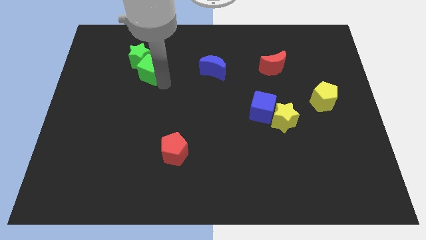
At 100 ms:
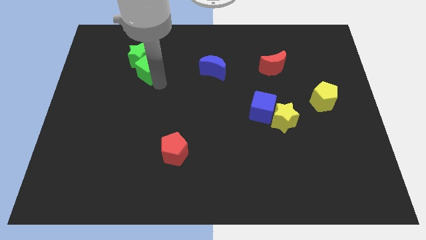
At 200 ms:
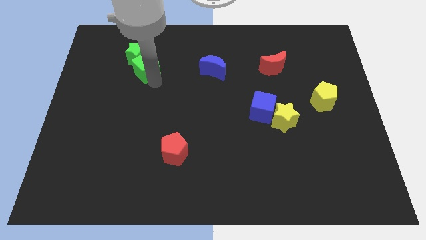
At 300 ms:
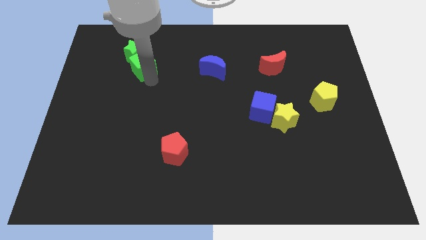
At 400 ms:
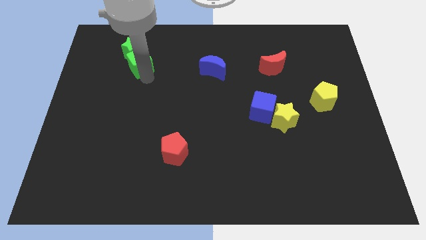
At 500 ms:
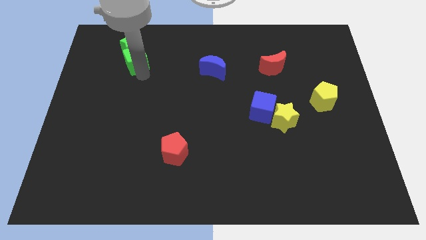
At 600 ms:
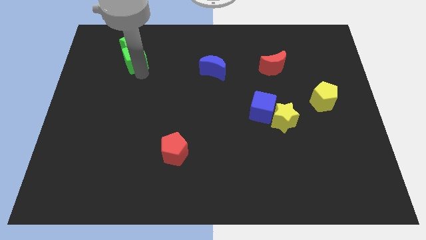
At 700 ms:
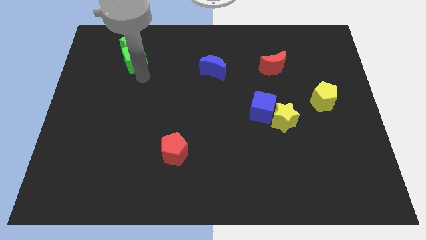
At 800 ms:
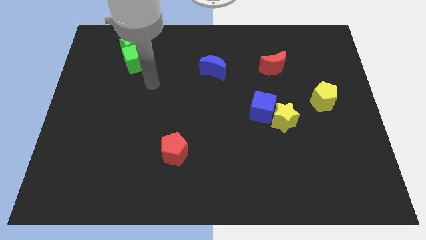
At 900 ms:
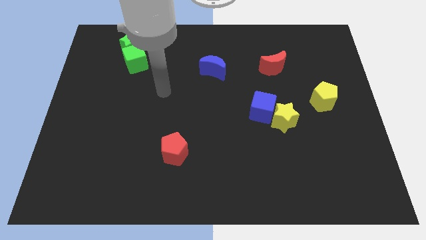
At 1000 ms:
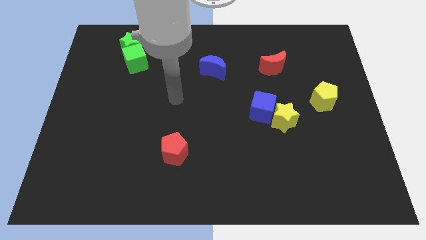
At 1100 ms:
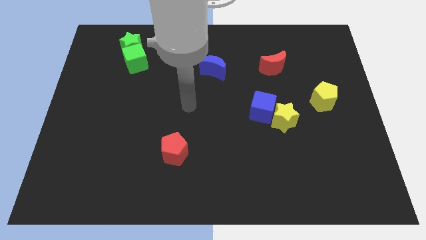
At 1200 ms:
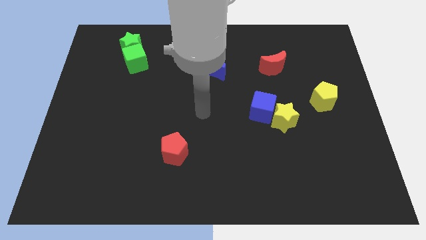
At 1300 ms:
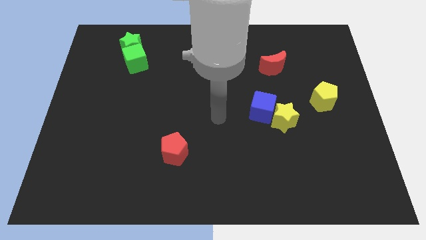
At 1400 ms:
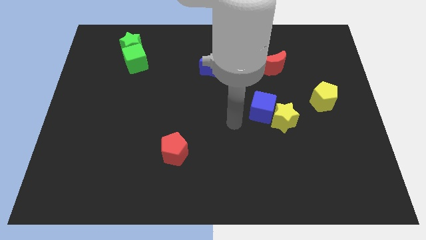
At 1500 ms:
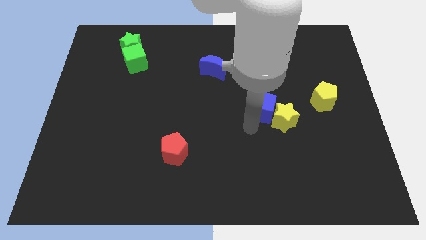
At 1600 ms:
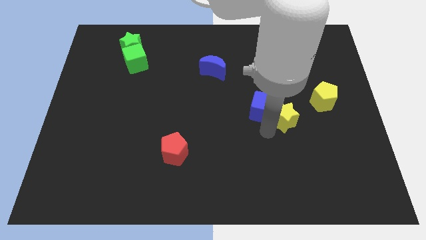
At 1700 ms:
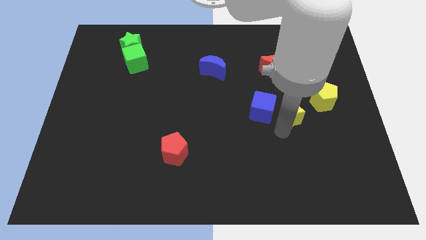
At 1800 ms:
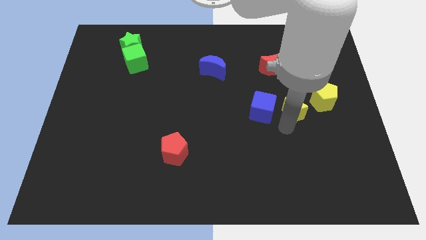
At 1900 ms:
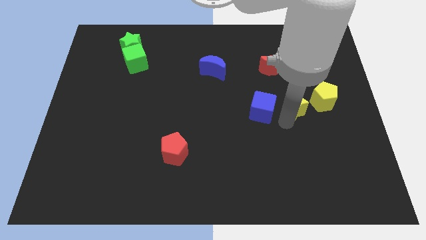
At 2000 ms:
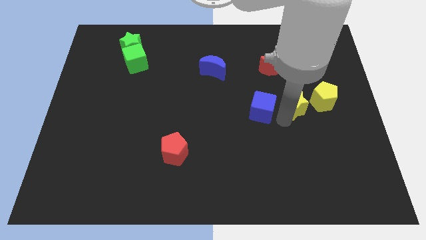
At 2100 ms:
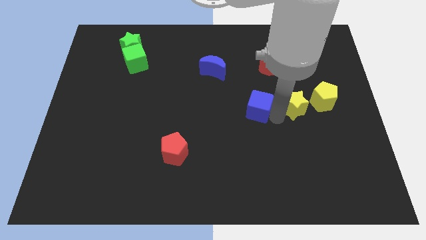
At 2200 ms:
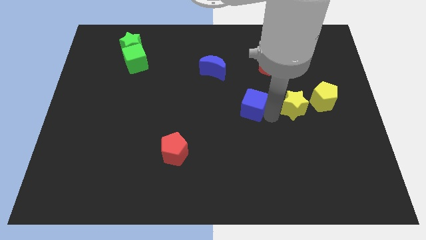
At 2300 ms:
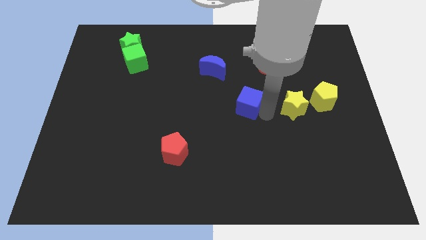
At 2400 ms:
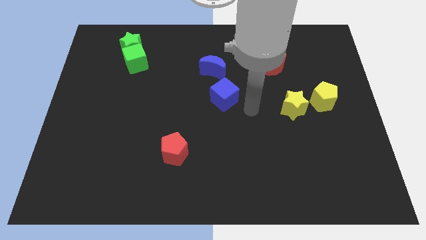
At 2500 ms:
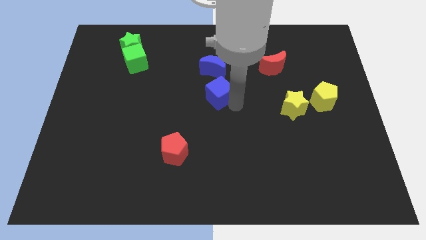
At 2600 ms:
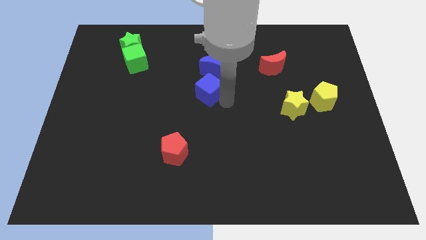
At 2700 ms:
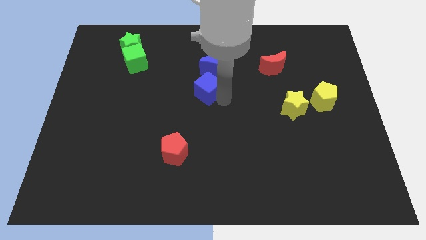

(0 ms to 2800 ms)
push blue cube below blue crescent

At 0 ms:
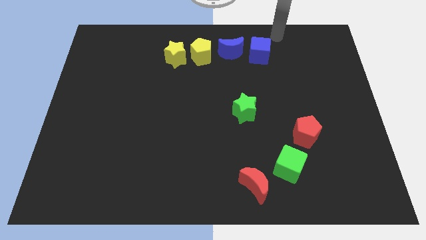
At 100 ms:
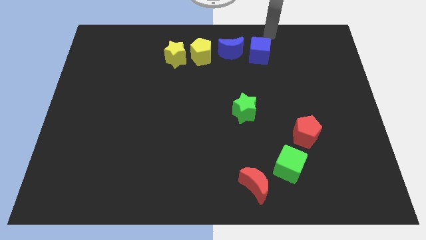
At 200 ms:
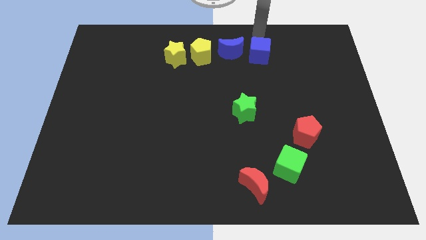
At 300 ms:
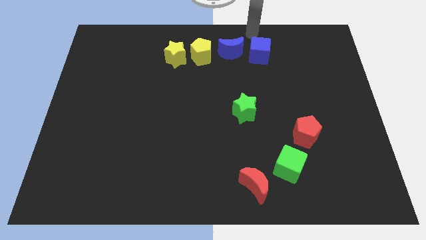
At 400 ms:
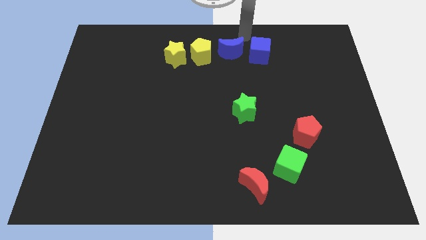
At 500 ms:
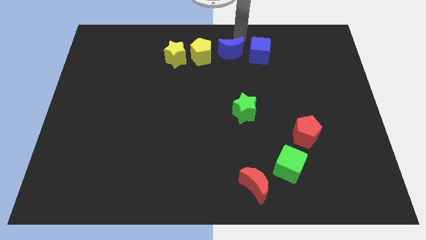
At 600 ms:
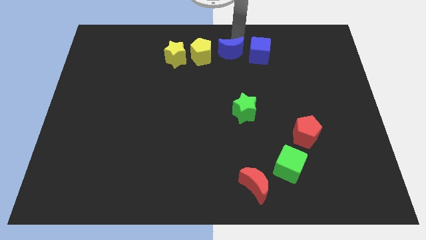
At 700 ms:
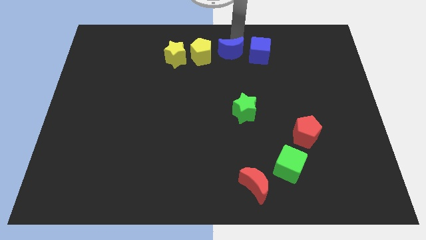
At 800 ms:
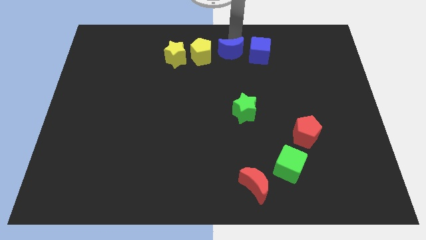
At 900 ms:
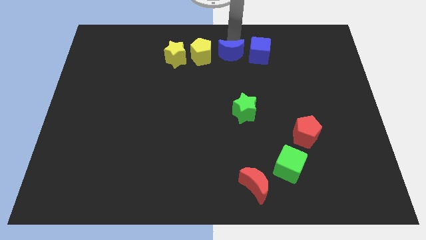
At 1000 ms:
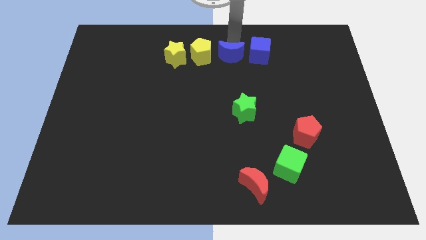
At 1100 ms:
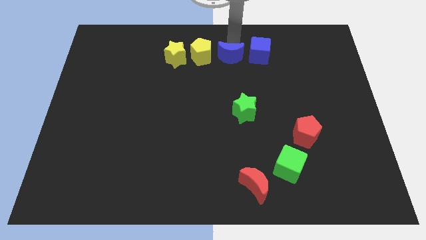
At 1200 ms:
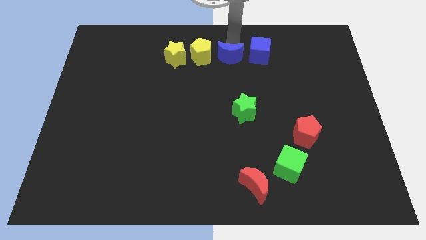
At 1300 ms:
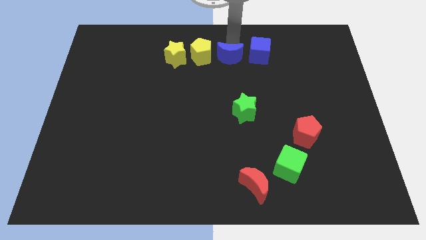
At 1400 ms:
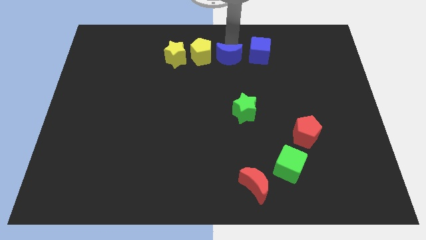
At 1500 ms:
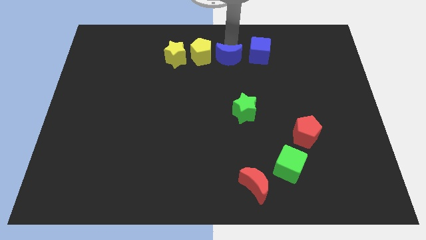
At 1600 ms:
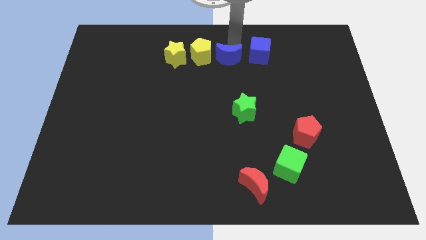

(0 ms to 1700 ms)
move the blue moon slightly to the bottom

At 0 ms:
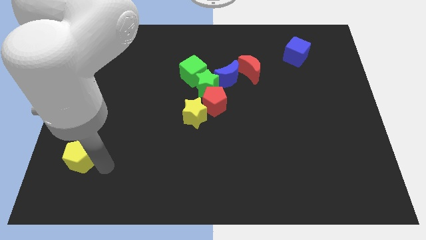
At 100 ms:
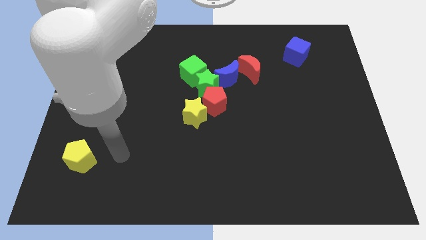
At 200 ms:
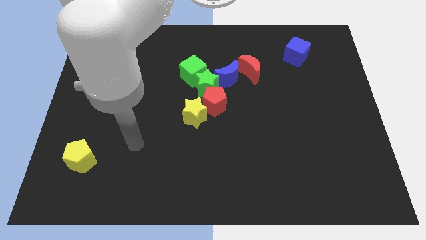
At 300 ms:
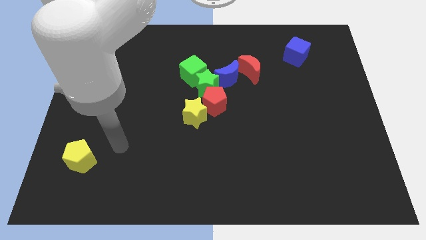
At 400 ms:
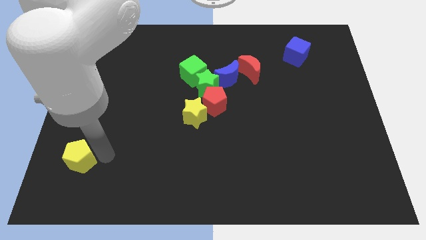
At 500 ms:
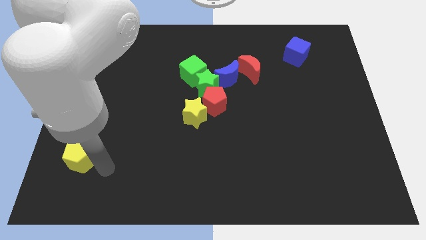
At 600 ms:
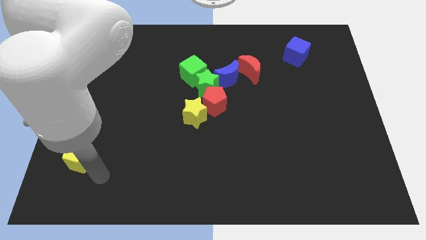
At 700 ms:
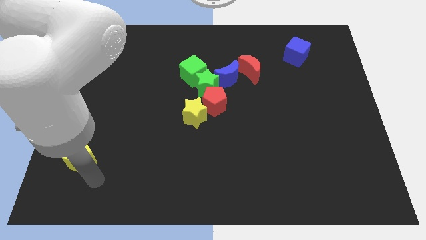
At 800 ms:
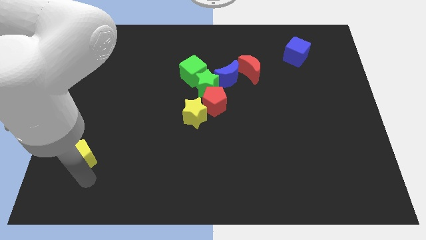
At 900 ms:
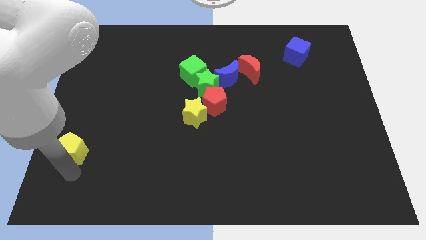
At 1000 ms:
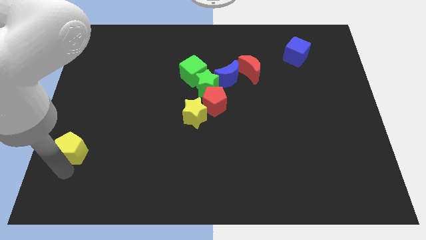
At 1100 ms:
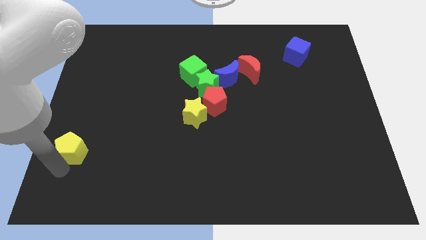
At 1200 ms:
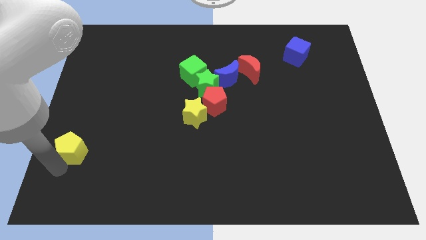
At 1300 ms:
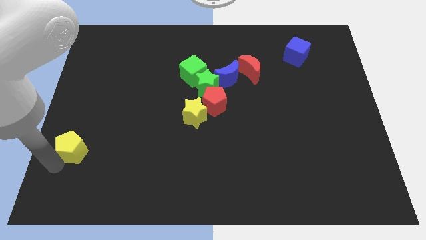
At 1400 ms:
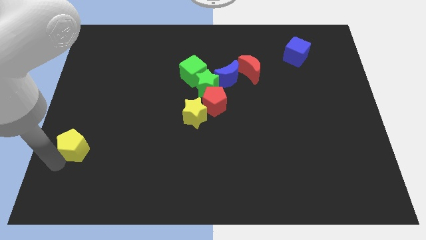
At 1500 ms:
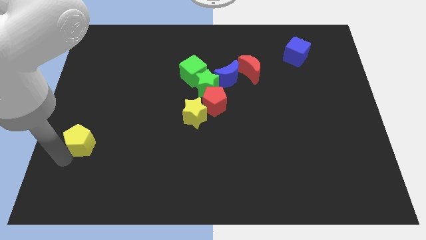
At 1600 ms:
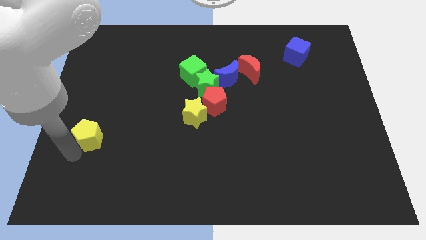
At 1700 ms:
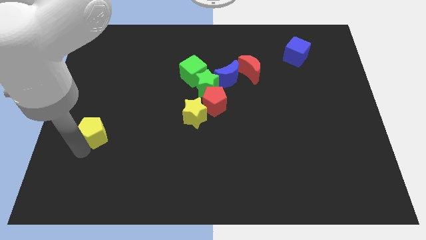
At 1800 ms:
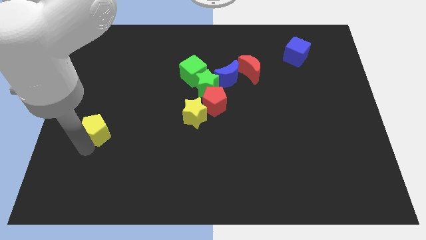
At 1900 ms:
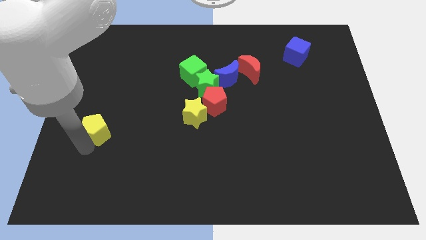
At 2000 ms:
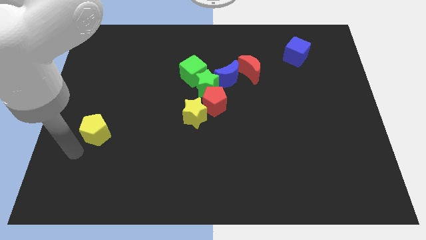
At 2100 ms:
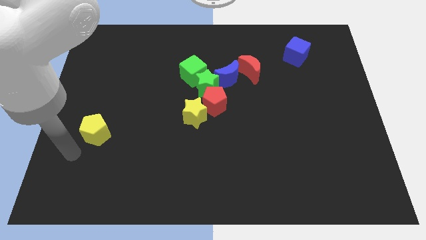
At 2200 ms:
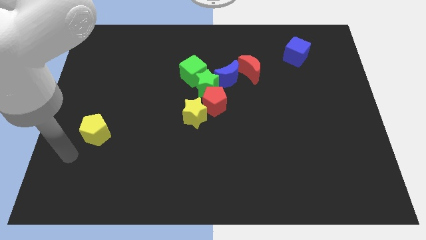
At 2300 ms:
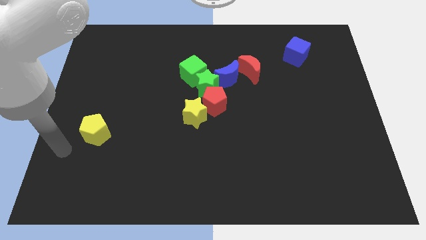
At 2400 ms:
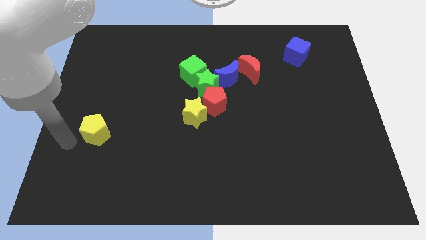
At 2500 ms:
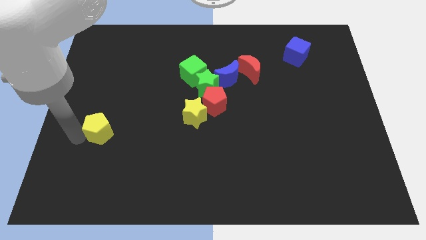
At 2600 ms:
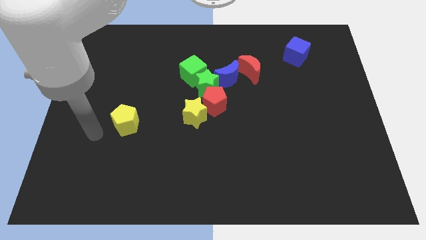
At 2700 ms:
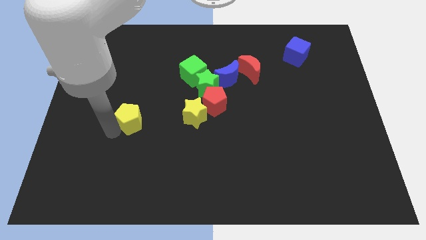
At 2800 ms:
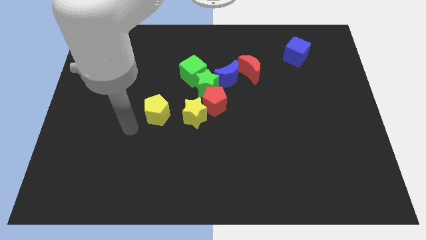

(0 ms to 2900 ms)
place the yellow pentagon left to the yellow star

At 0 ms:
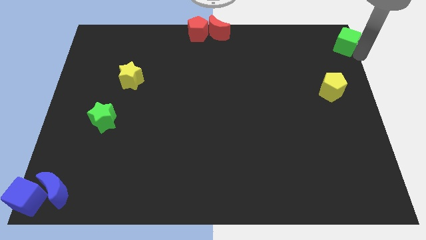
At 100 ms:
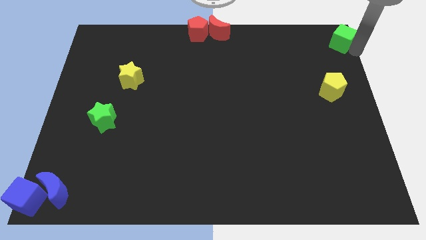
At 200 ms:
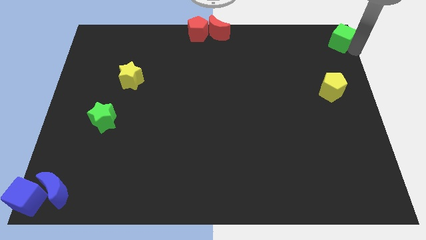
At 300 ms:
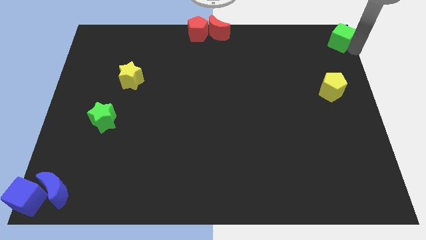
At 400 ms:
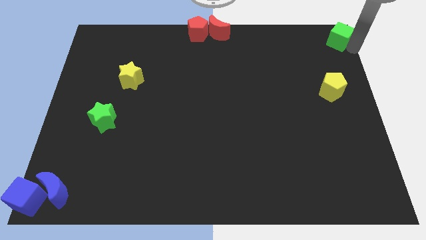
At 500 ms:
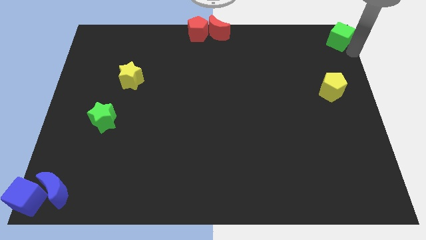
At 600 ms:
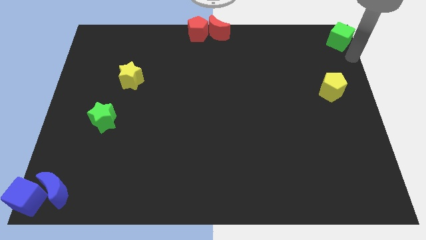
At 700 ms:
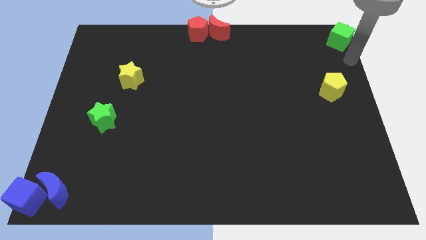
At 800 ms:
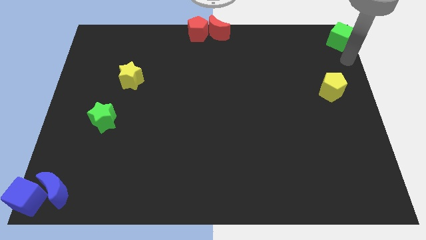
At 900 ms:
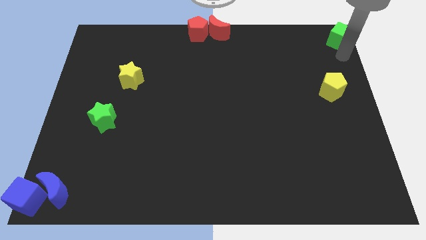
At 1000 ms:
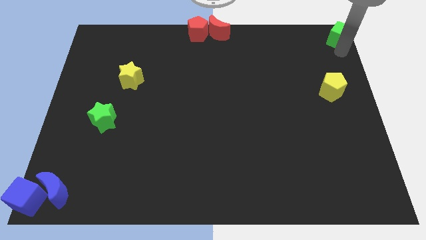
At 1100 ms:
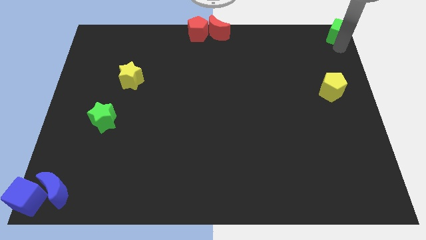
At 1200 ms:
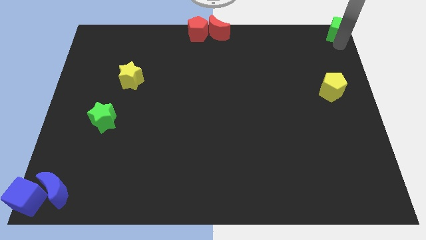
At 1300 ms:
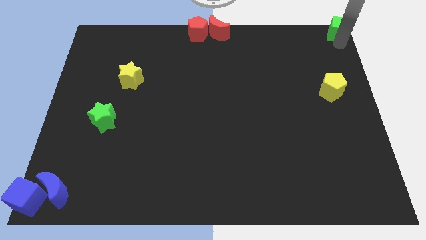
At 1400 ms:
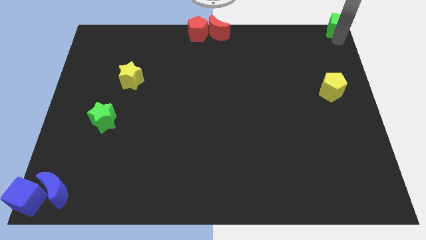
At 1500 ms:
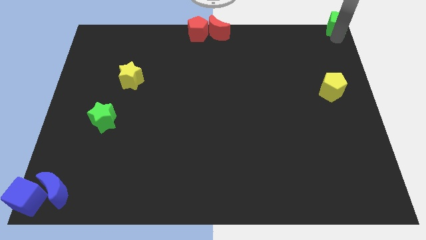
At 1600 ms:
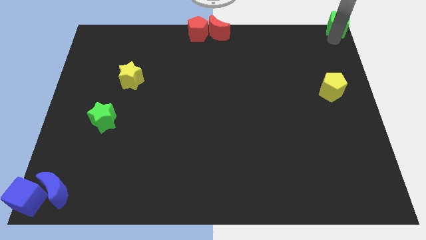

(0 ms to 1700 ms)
move the green cube to the top right corner
